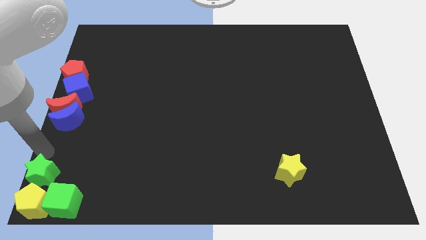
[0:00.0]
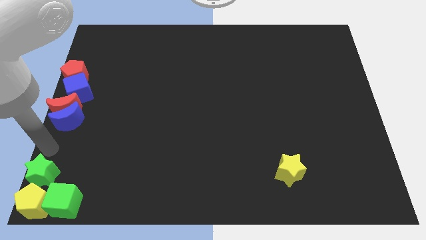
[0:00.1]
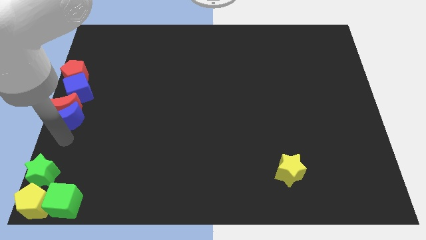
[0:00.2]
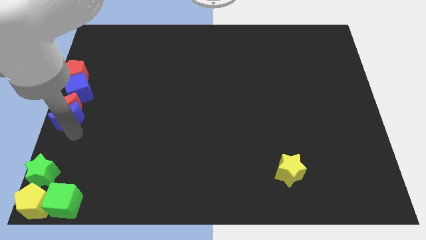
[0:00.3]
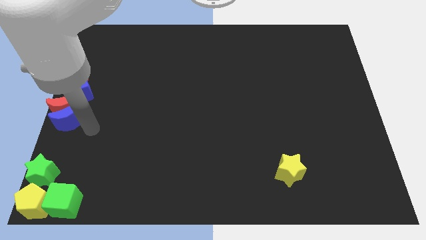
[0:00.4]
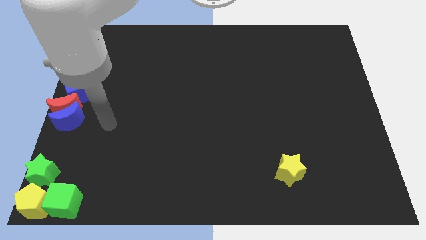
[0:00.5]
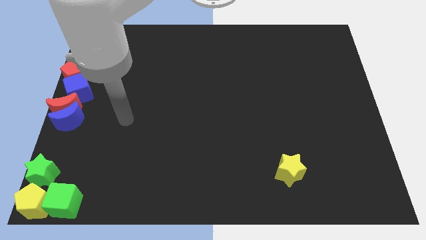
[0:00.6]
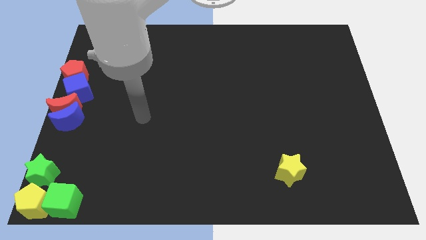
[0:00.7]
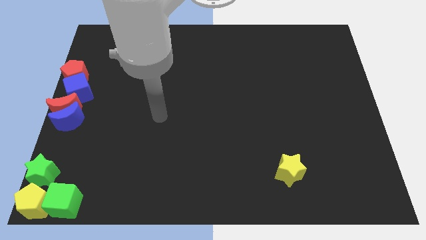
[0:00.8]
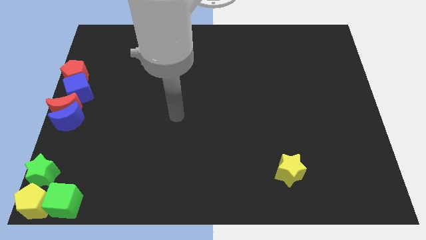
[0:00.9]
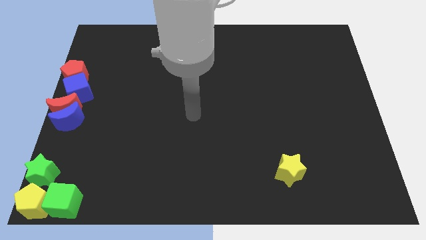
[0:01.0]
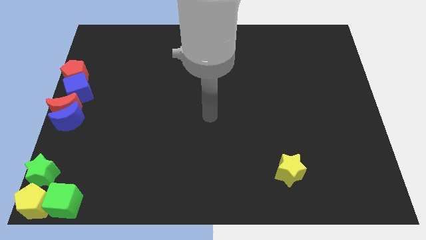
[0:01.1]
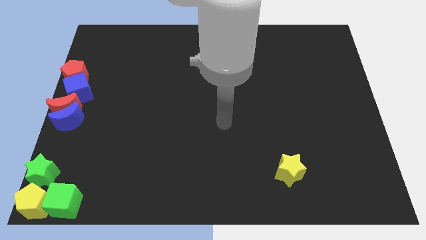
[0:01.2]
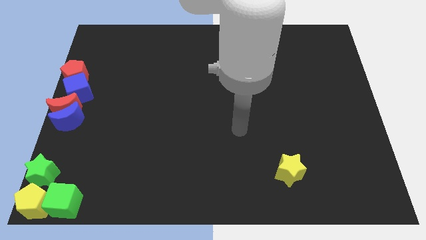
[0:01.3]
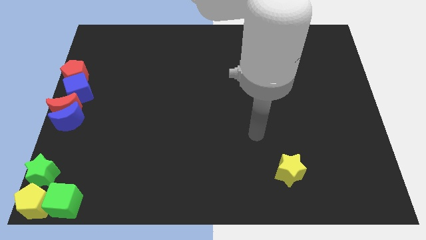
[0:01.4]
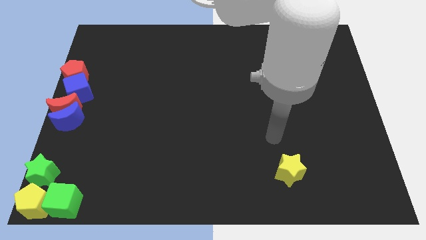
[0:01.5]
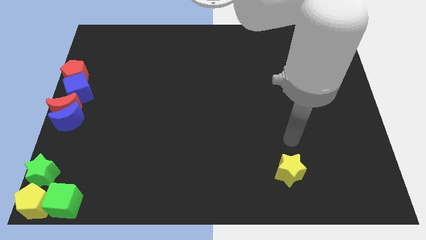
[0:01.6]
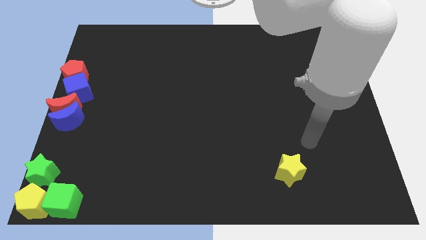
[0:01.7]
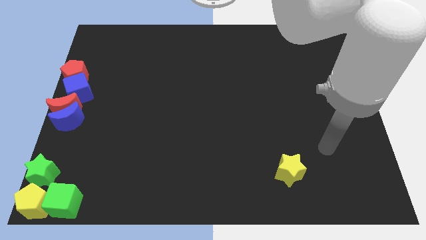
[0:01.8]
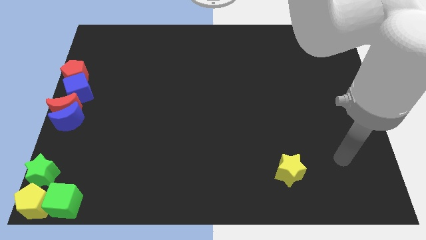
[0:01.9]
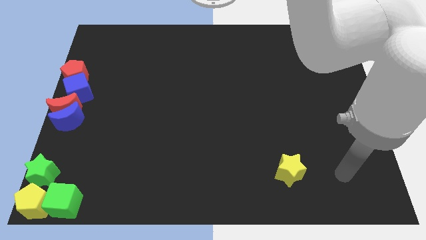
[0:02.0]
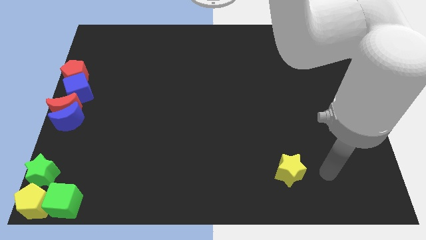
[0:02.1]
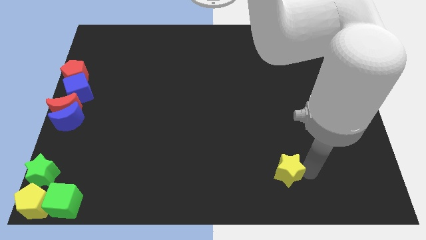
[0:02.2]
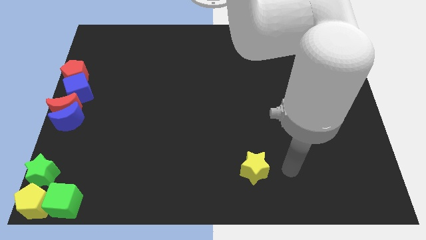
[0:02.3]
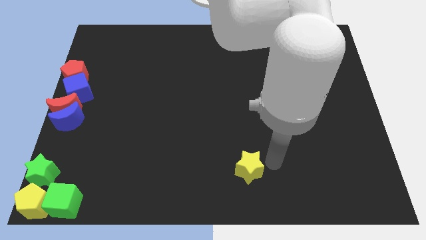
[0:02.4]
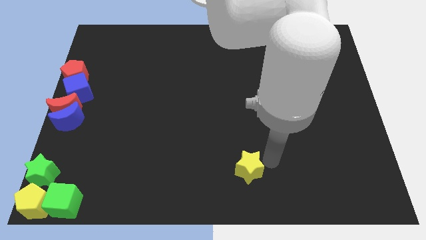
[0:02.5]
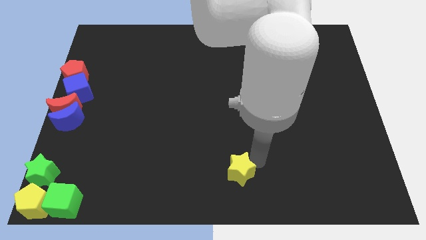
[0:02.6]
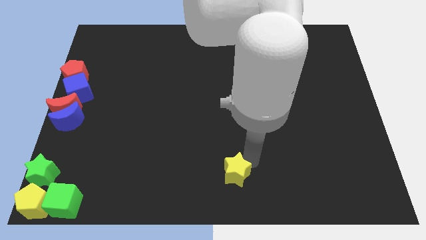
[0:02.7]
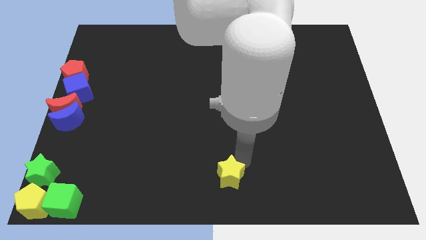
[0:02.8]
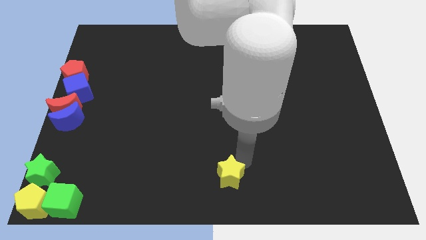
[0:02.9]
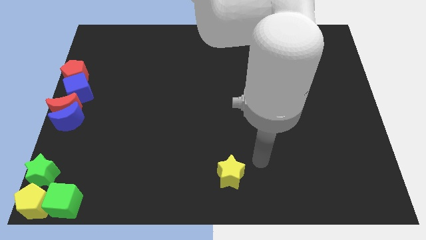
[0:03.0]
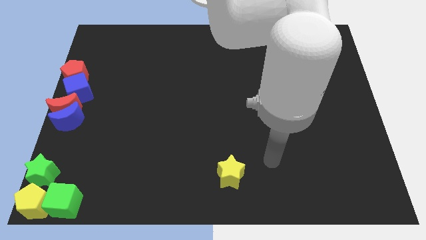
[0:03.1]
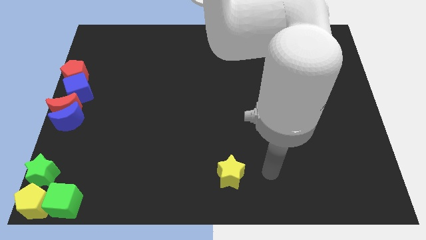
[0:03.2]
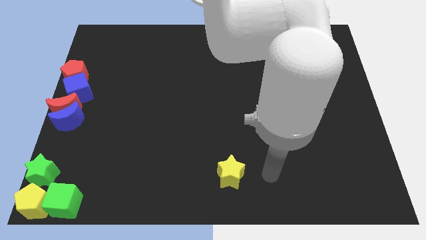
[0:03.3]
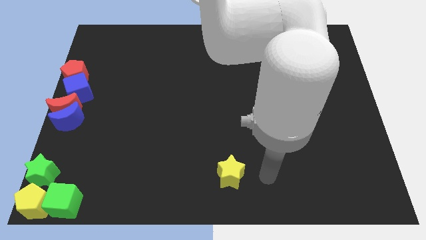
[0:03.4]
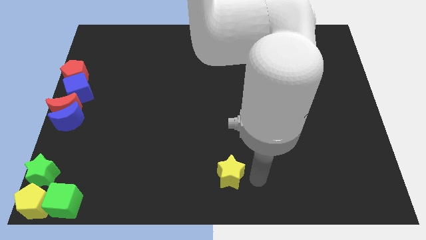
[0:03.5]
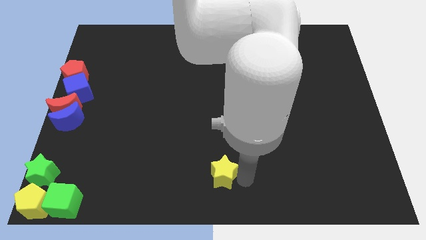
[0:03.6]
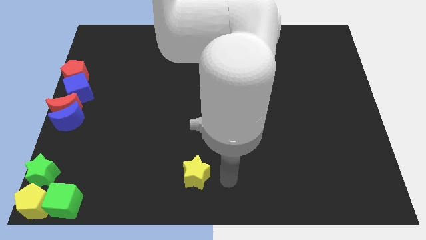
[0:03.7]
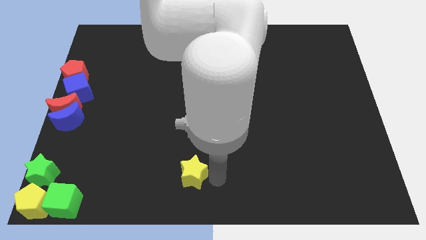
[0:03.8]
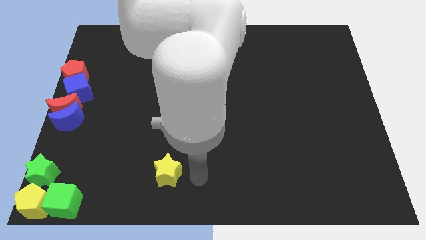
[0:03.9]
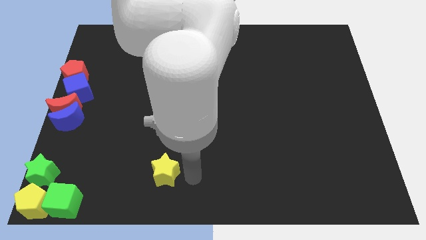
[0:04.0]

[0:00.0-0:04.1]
put the yellow star parallel to green star

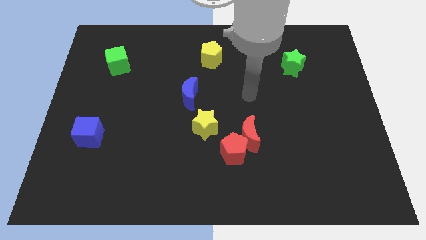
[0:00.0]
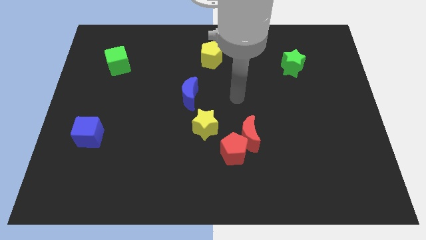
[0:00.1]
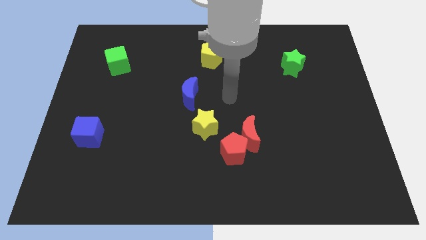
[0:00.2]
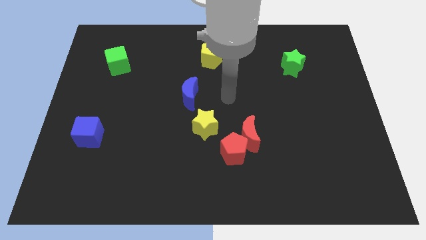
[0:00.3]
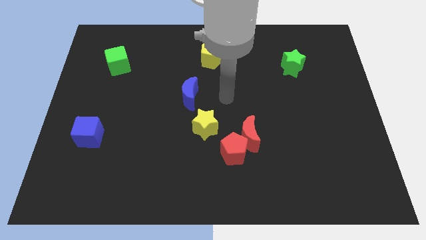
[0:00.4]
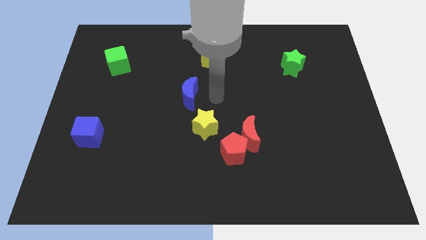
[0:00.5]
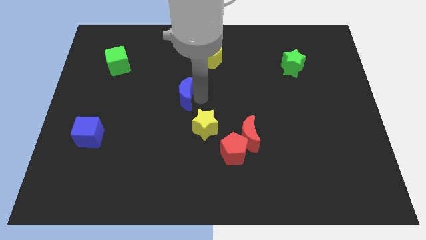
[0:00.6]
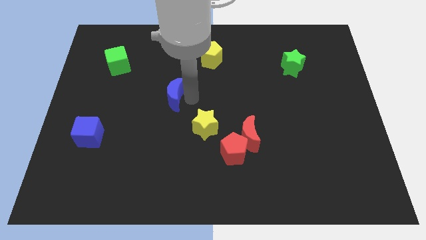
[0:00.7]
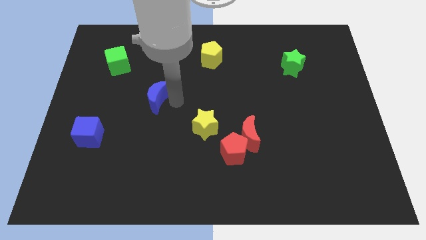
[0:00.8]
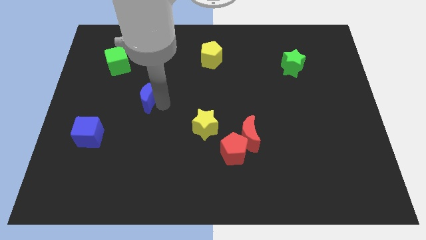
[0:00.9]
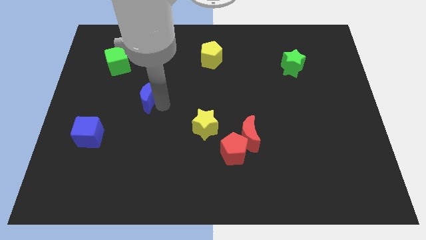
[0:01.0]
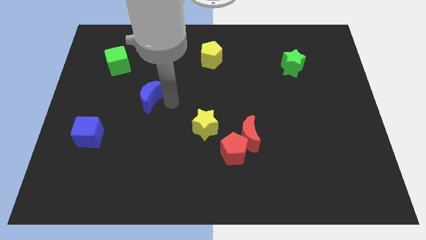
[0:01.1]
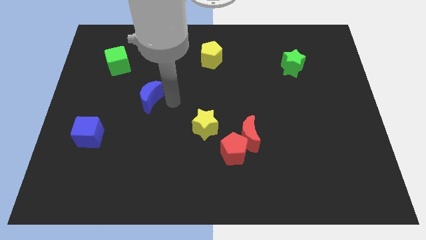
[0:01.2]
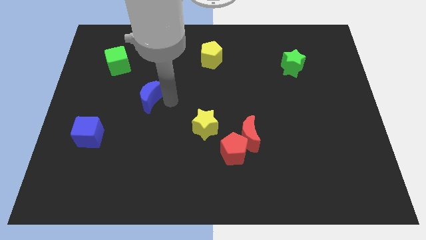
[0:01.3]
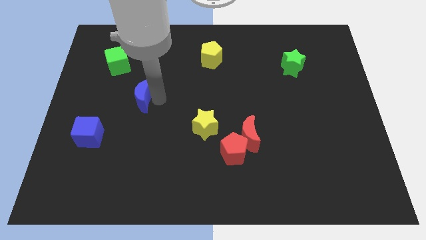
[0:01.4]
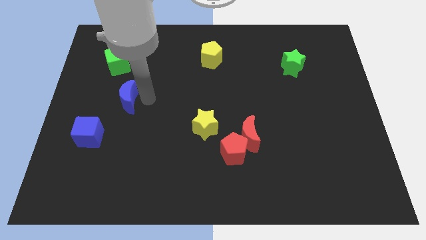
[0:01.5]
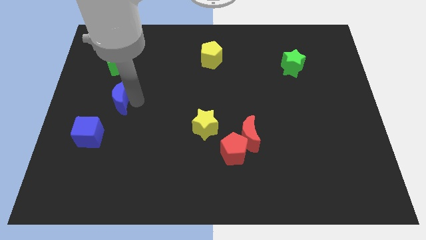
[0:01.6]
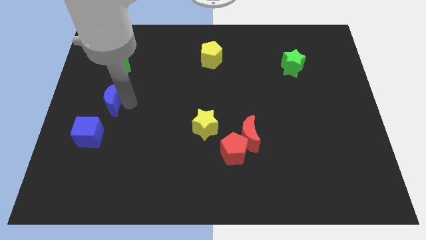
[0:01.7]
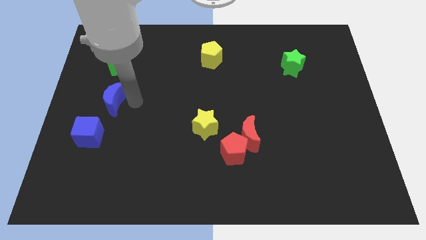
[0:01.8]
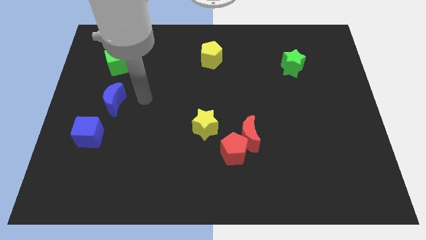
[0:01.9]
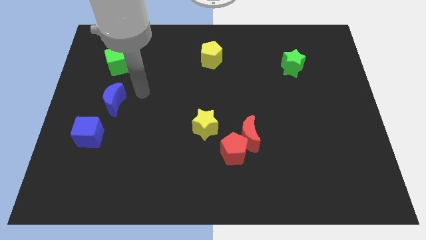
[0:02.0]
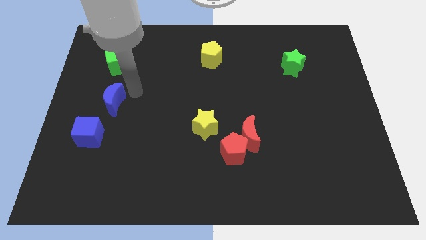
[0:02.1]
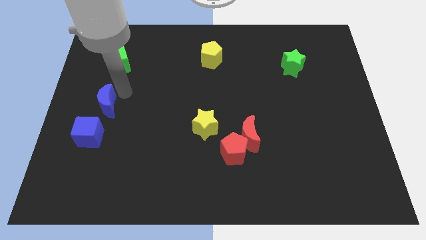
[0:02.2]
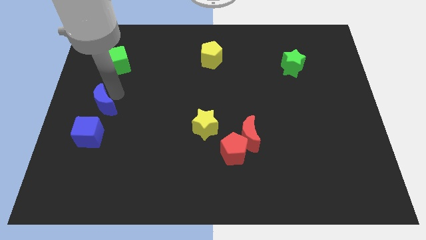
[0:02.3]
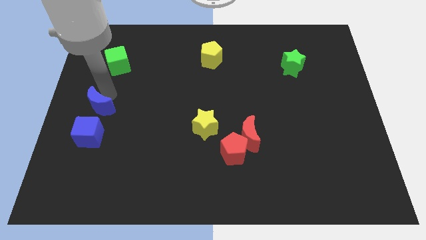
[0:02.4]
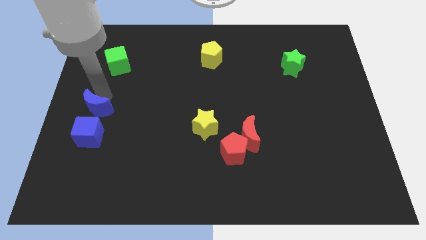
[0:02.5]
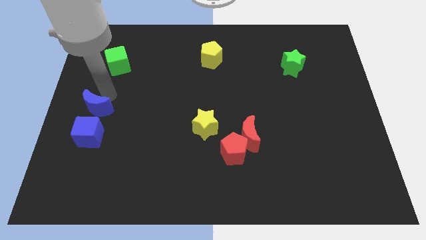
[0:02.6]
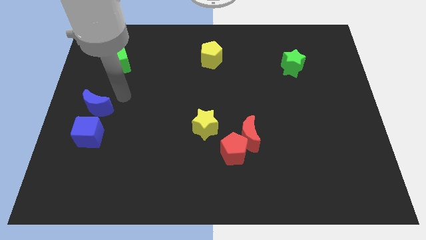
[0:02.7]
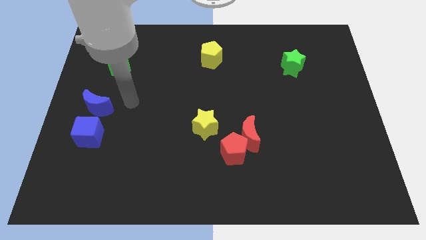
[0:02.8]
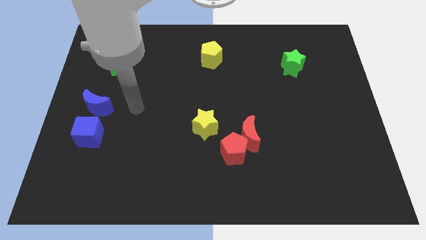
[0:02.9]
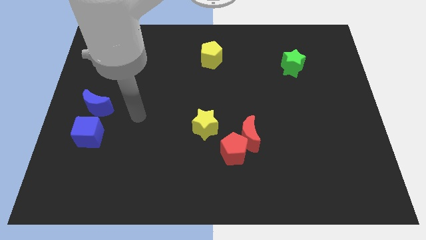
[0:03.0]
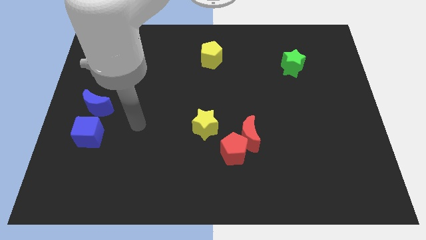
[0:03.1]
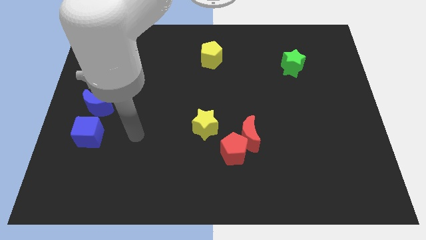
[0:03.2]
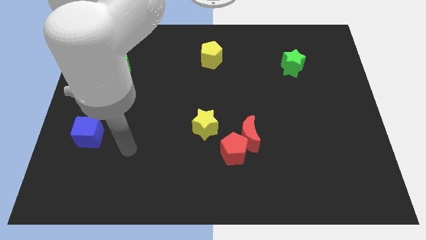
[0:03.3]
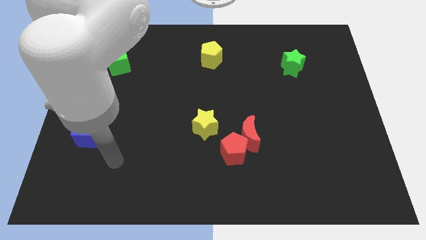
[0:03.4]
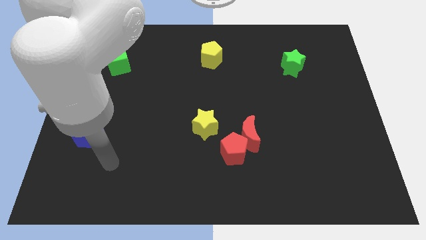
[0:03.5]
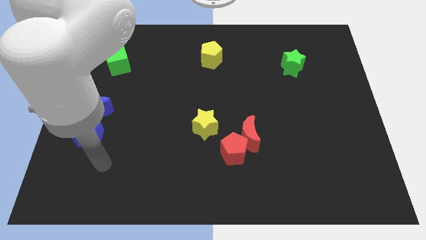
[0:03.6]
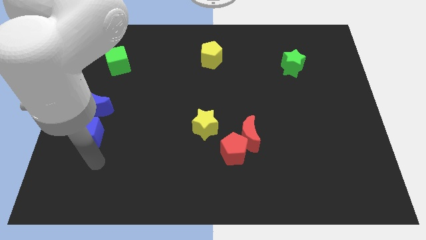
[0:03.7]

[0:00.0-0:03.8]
push the blue moon to the left side of the board

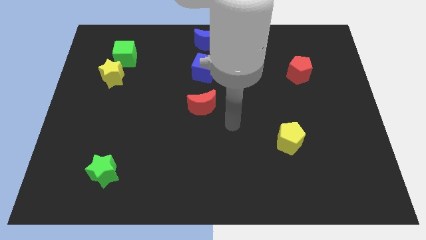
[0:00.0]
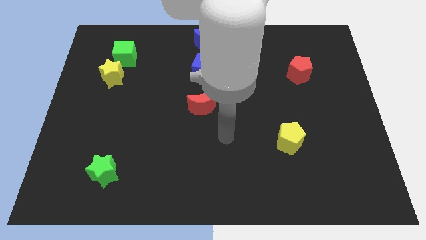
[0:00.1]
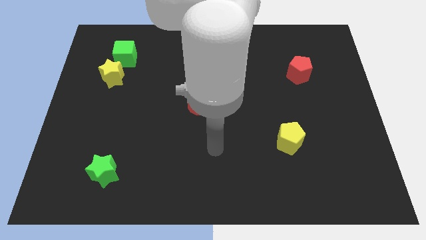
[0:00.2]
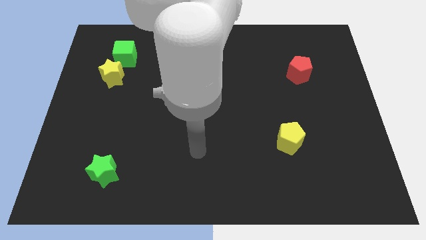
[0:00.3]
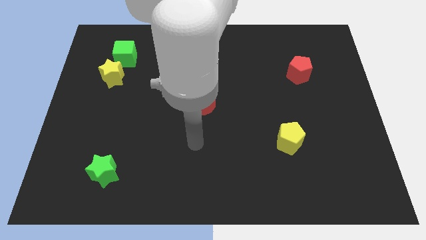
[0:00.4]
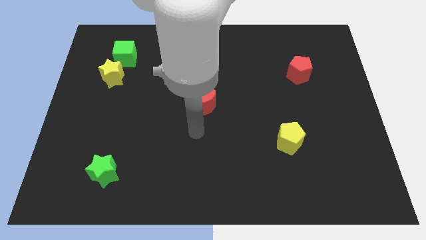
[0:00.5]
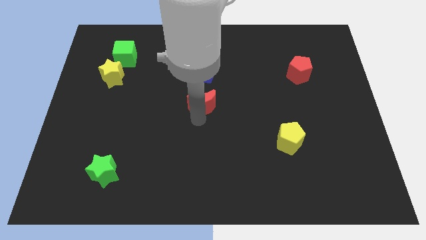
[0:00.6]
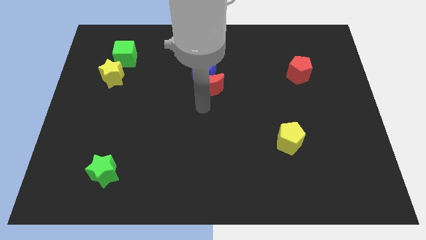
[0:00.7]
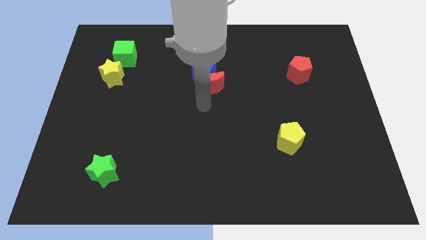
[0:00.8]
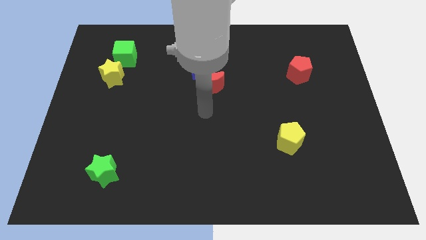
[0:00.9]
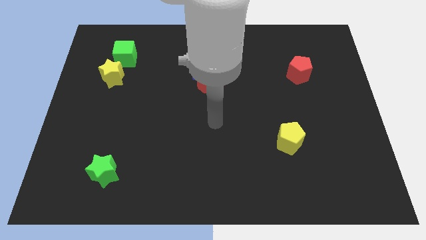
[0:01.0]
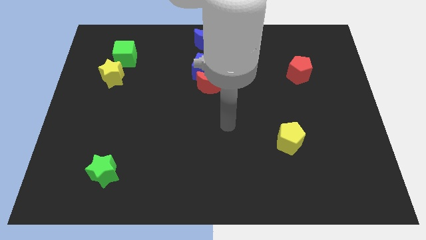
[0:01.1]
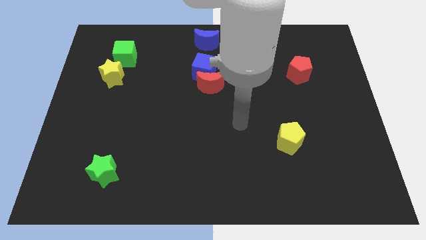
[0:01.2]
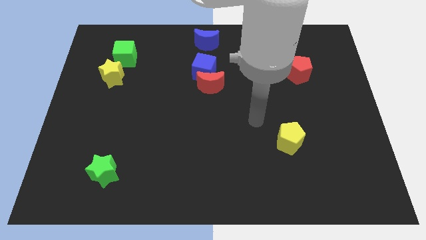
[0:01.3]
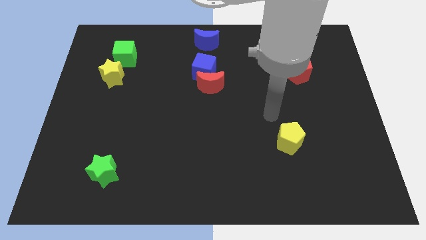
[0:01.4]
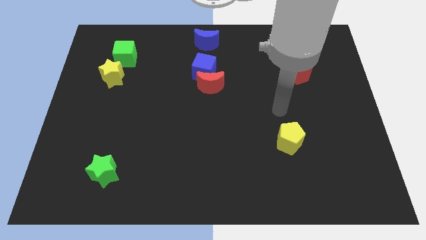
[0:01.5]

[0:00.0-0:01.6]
move the red crescent to the bottom of the blue cube
